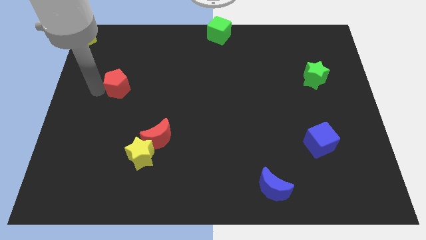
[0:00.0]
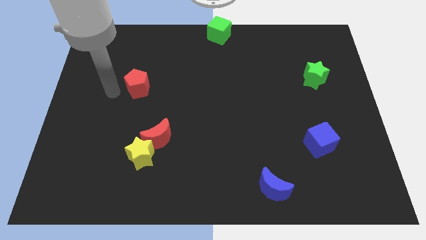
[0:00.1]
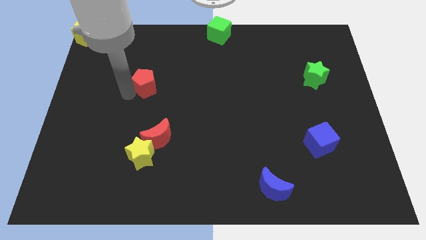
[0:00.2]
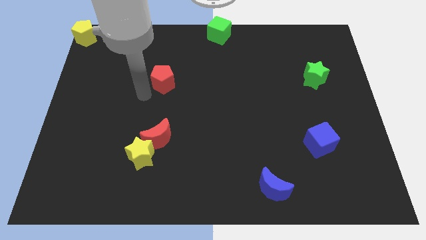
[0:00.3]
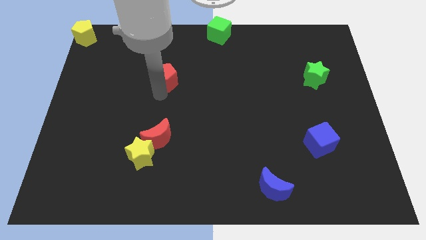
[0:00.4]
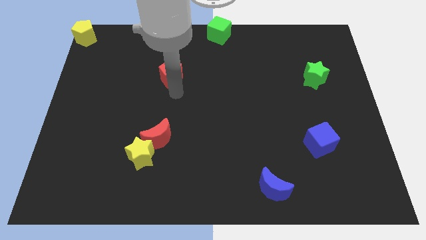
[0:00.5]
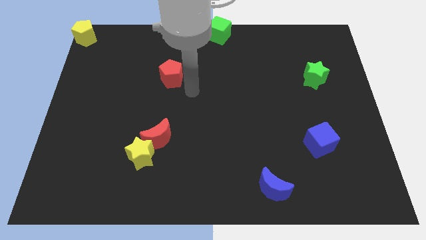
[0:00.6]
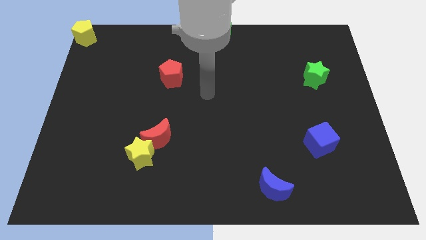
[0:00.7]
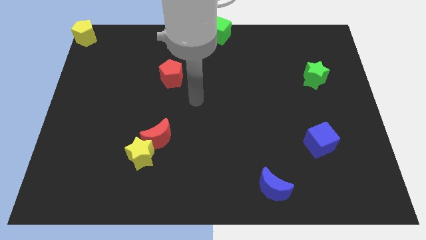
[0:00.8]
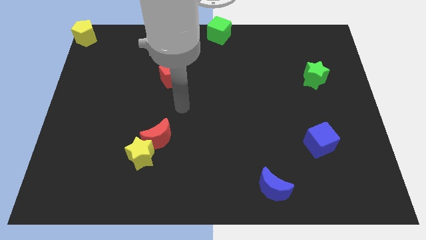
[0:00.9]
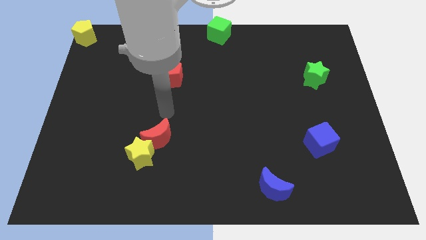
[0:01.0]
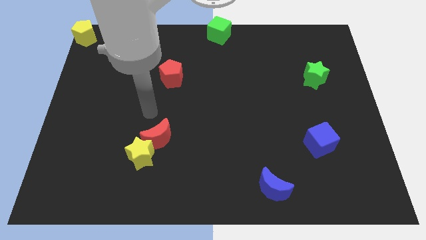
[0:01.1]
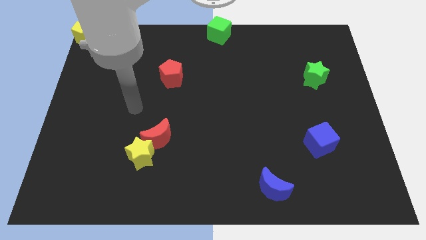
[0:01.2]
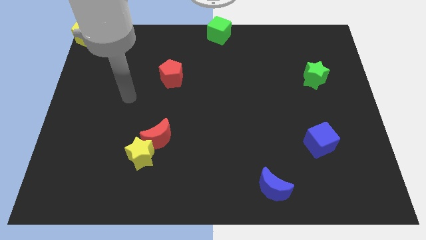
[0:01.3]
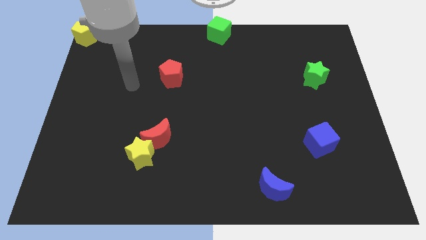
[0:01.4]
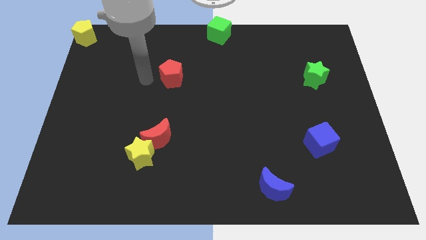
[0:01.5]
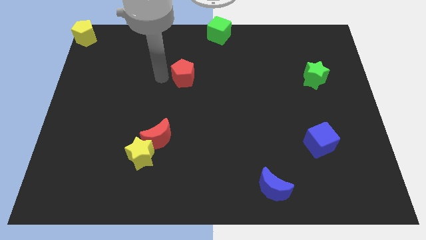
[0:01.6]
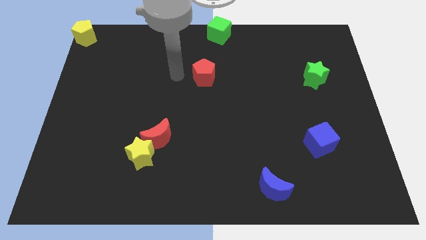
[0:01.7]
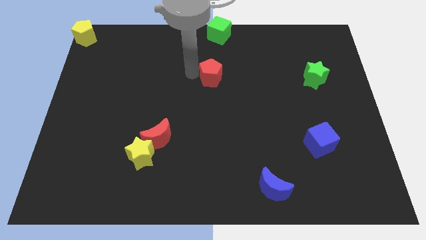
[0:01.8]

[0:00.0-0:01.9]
move the red pentagon below the green cube

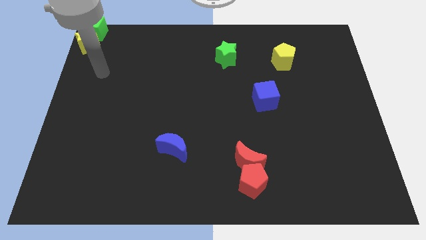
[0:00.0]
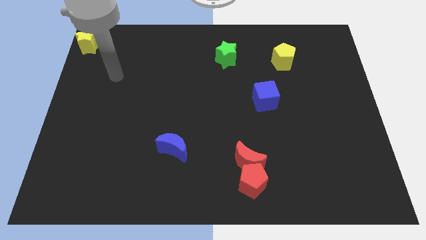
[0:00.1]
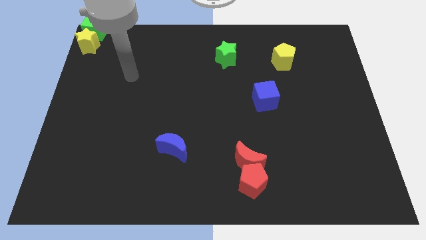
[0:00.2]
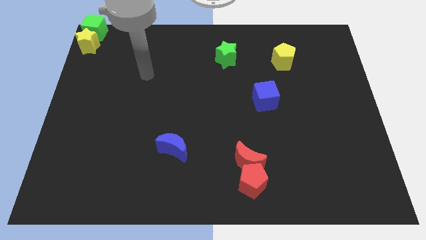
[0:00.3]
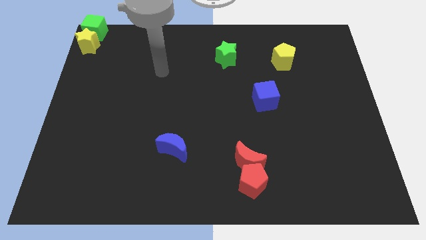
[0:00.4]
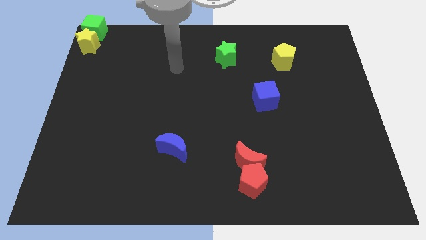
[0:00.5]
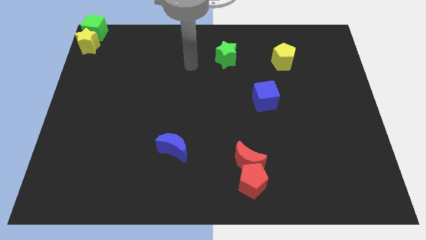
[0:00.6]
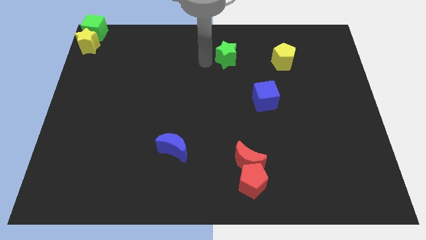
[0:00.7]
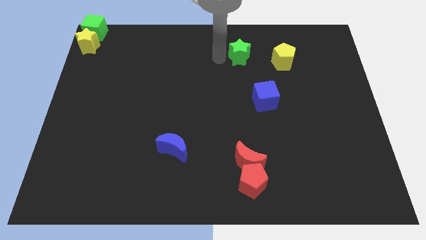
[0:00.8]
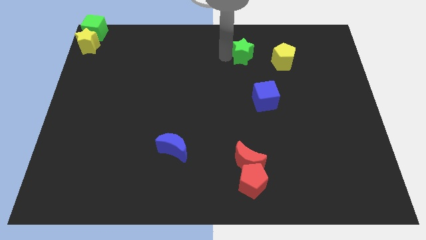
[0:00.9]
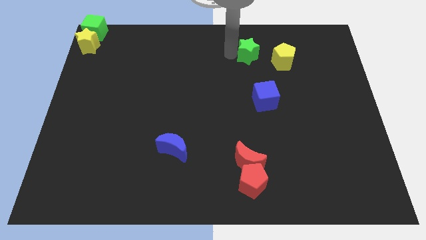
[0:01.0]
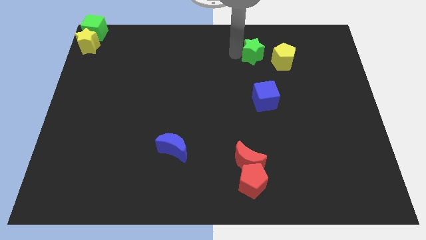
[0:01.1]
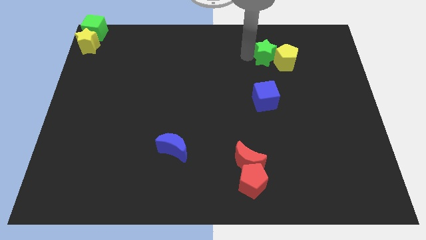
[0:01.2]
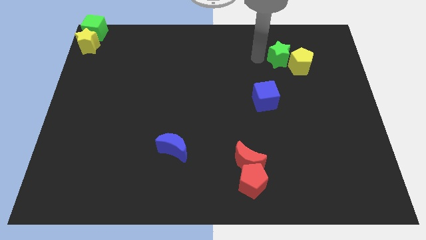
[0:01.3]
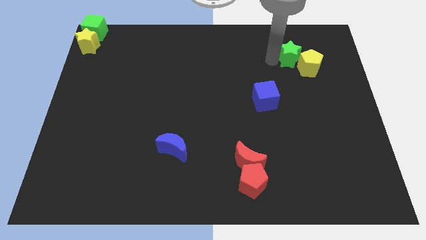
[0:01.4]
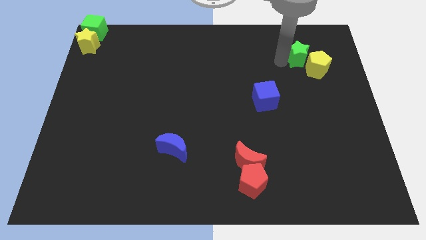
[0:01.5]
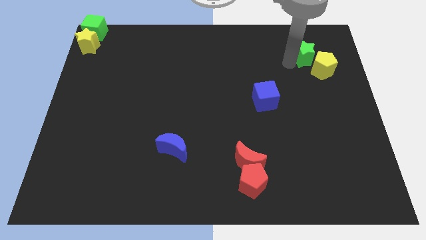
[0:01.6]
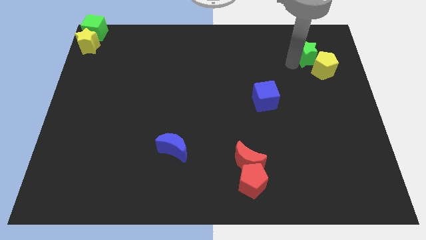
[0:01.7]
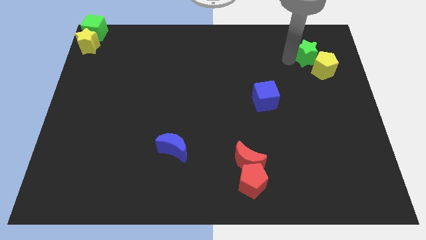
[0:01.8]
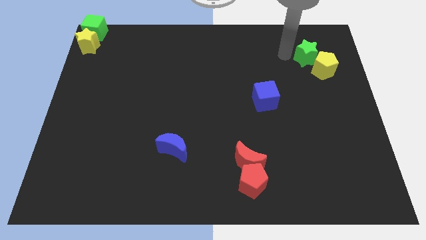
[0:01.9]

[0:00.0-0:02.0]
push the green star into yellow pentagon towards right

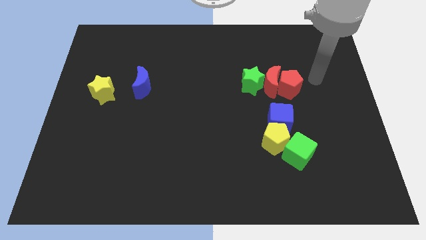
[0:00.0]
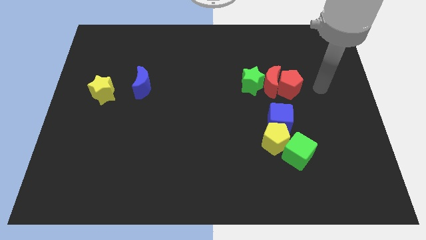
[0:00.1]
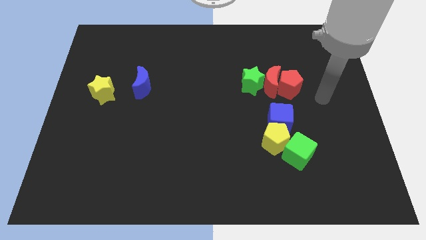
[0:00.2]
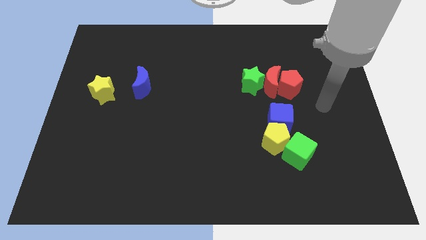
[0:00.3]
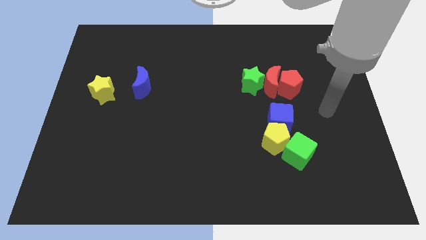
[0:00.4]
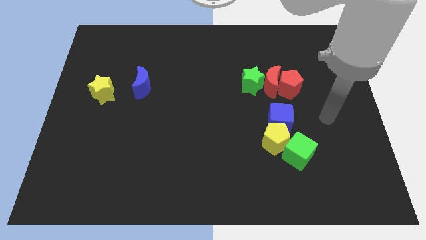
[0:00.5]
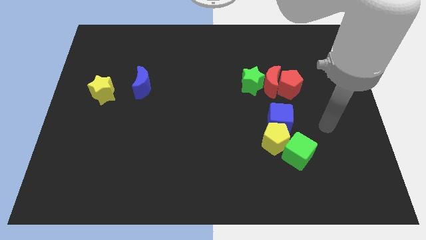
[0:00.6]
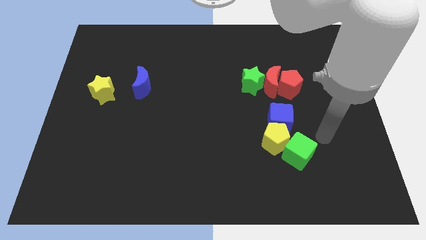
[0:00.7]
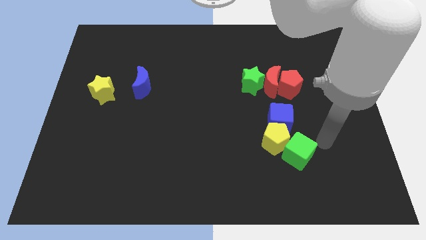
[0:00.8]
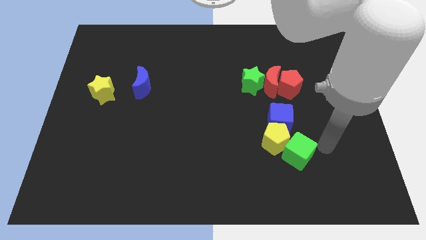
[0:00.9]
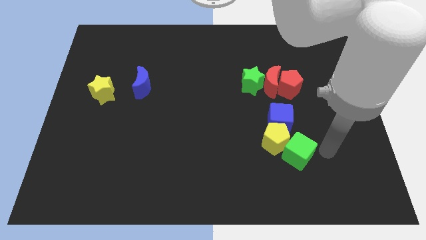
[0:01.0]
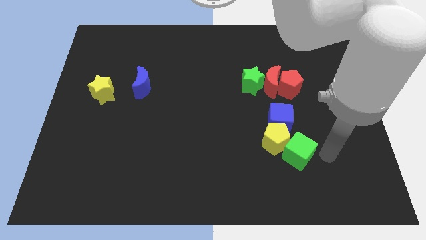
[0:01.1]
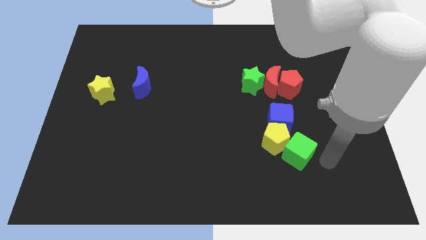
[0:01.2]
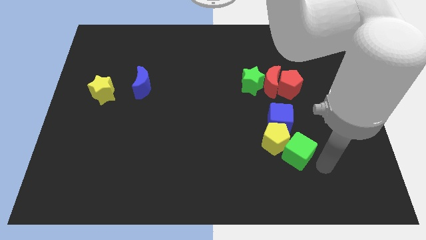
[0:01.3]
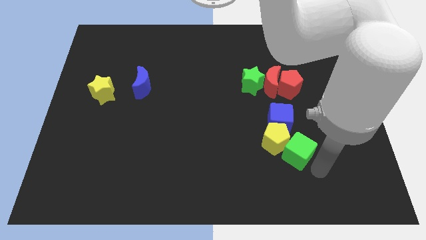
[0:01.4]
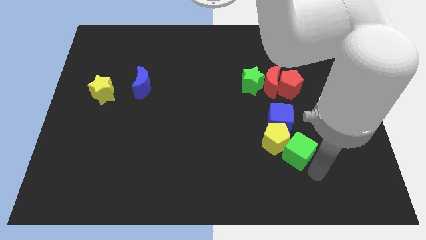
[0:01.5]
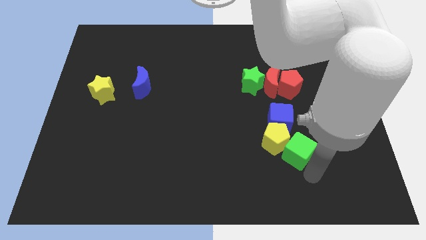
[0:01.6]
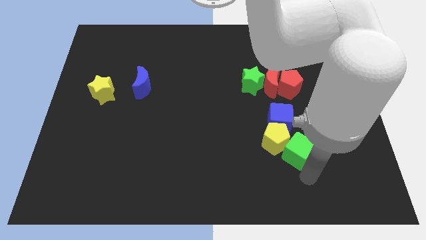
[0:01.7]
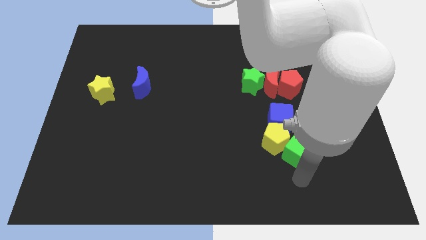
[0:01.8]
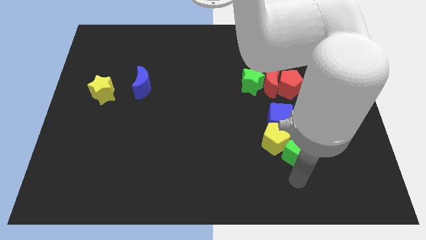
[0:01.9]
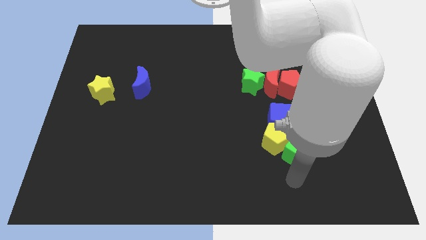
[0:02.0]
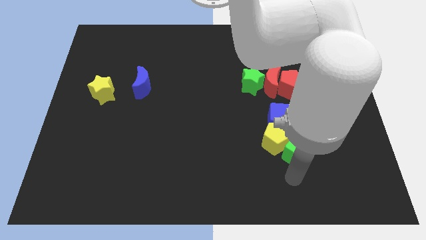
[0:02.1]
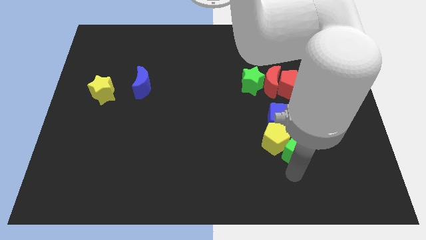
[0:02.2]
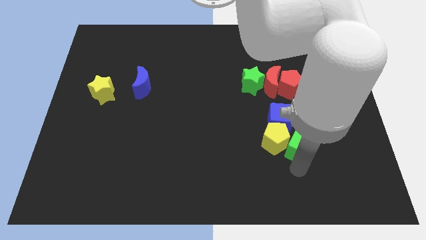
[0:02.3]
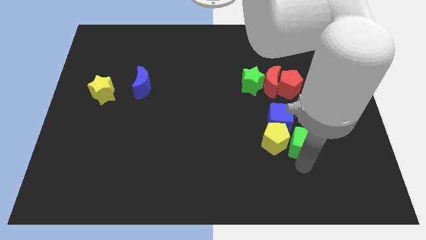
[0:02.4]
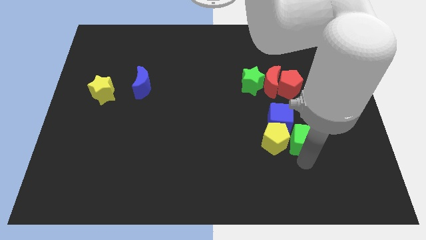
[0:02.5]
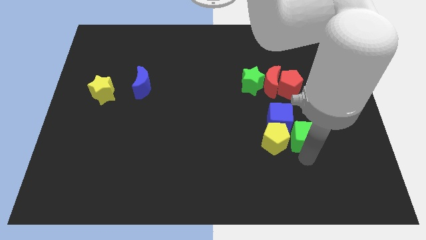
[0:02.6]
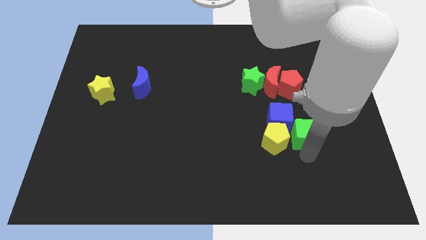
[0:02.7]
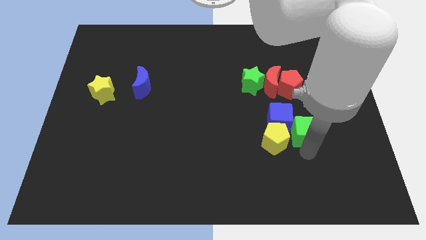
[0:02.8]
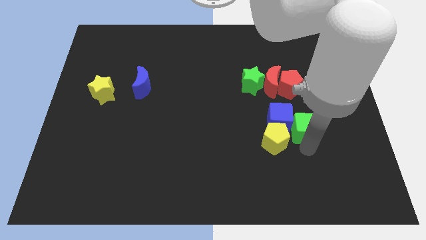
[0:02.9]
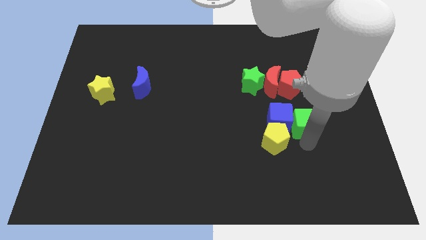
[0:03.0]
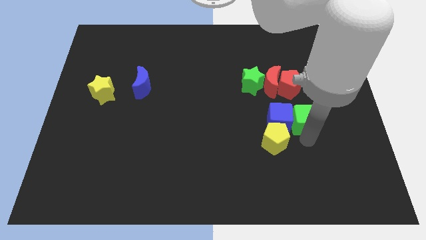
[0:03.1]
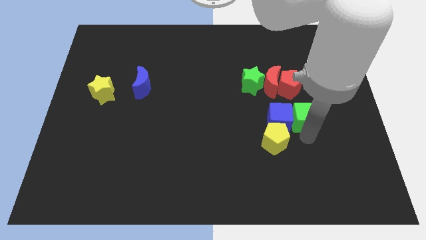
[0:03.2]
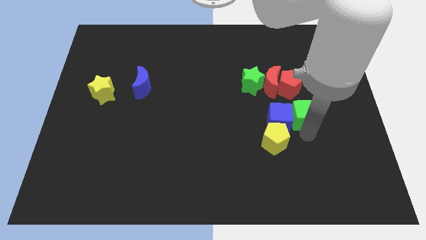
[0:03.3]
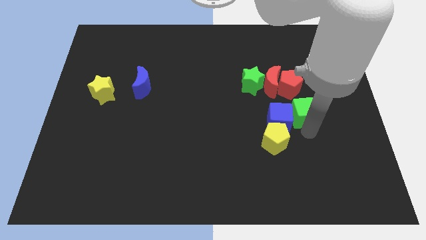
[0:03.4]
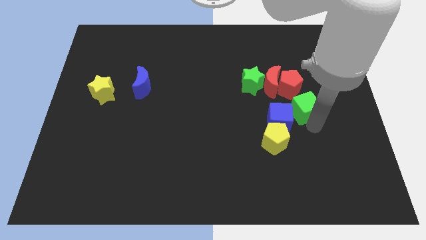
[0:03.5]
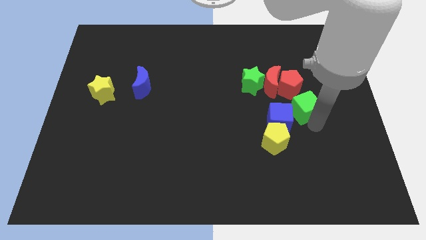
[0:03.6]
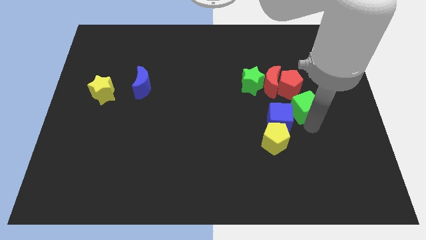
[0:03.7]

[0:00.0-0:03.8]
move green cube to the top right of blue cube

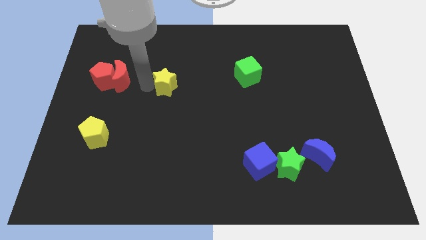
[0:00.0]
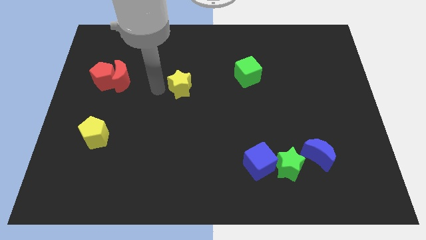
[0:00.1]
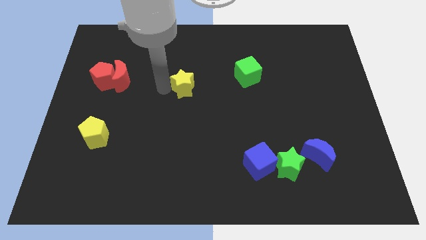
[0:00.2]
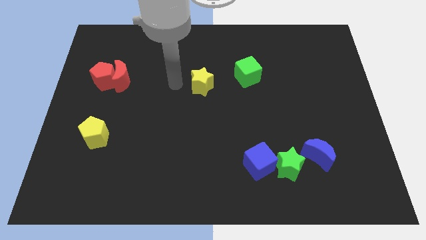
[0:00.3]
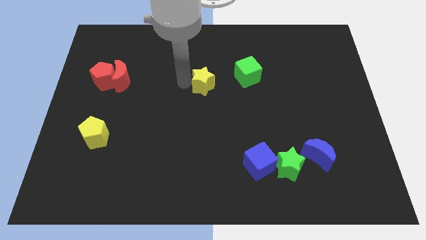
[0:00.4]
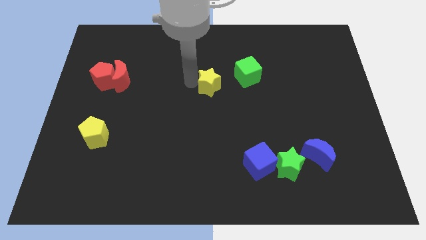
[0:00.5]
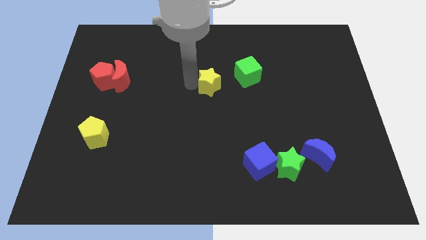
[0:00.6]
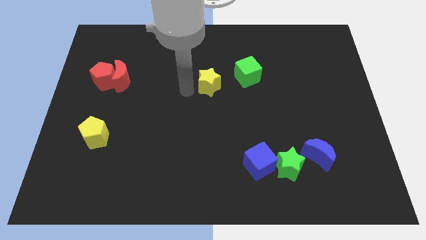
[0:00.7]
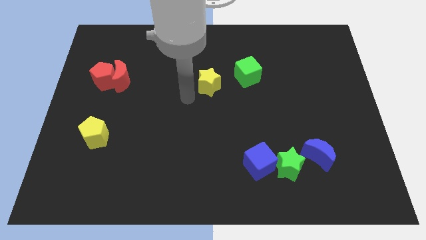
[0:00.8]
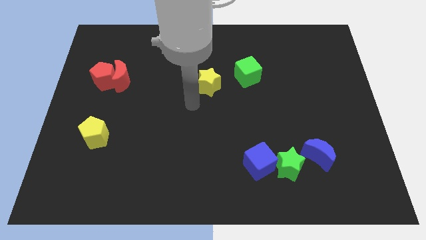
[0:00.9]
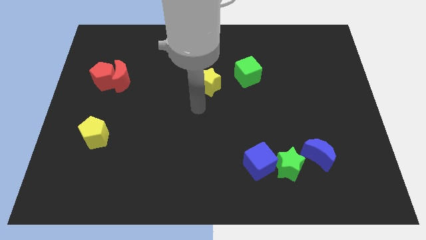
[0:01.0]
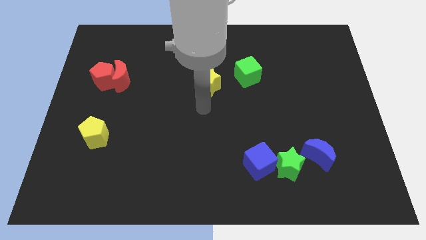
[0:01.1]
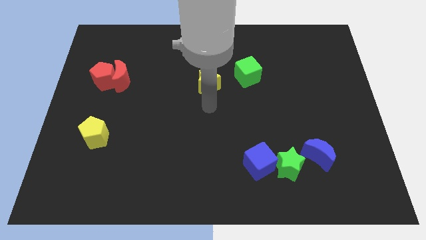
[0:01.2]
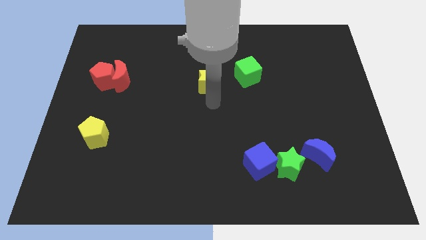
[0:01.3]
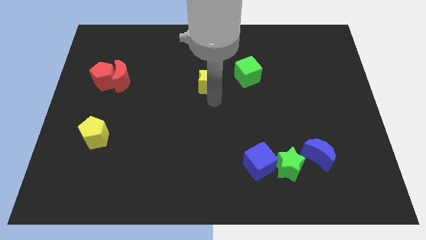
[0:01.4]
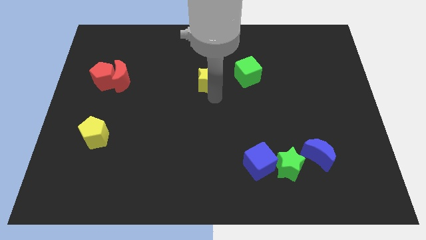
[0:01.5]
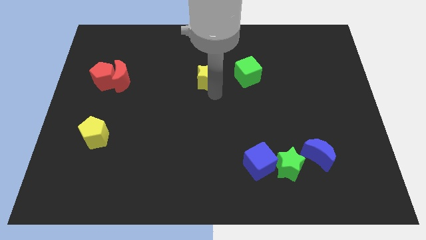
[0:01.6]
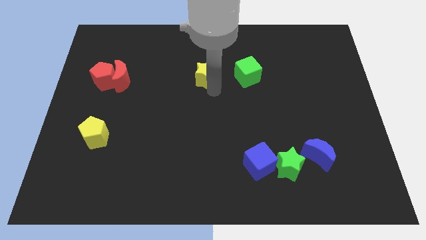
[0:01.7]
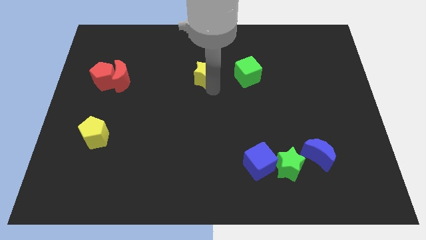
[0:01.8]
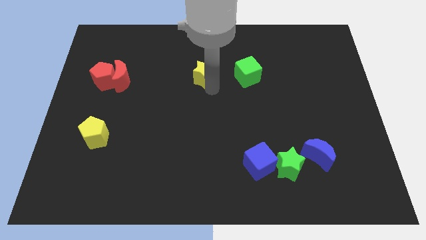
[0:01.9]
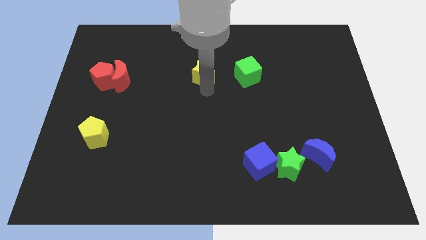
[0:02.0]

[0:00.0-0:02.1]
move the yellow star to the left of the green cube
